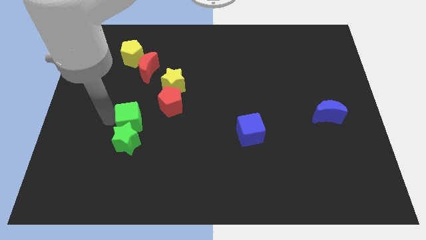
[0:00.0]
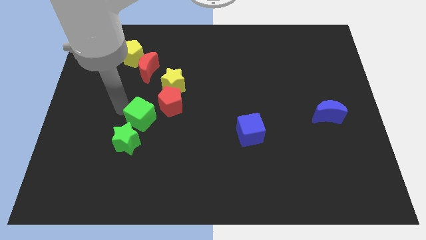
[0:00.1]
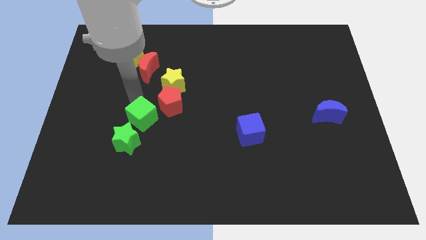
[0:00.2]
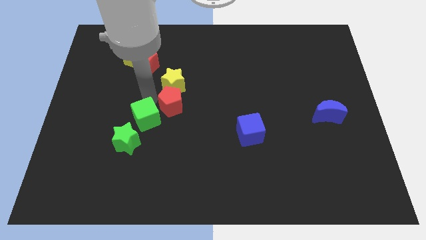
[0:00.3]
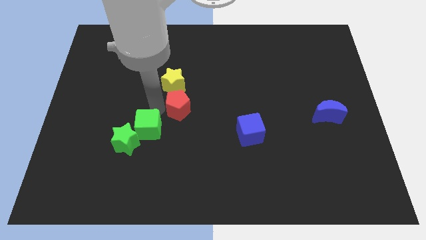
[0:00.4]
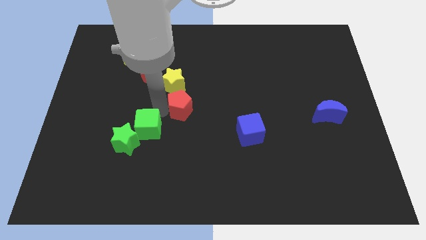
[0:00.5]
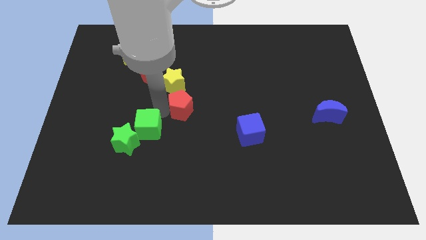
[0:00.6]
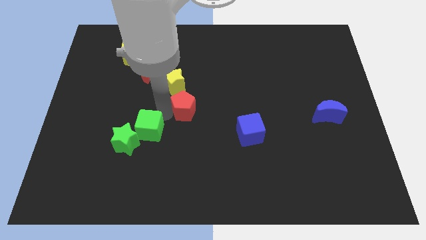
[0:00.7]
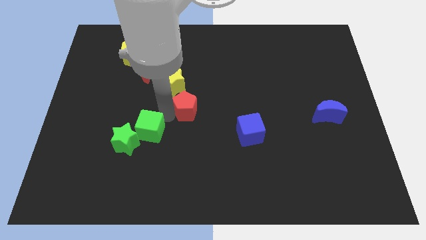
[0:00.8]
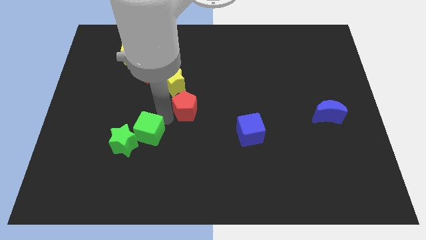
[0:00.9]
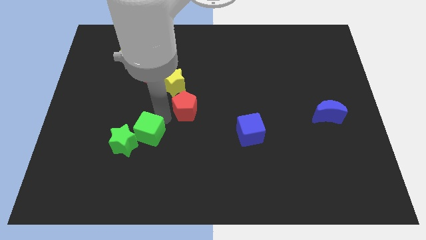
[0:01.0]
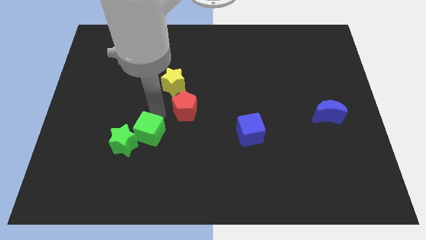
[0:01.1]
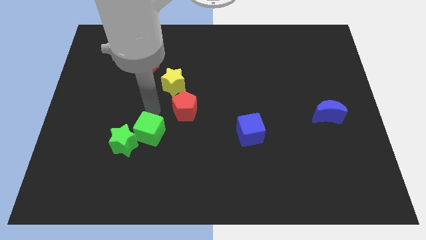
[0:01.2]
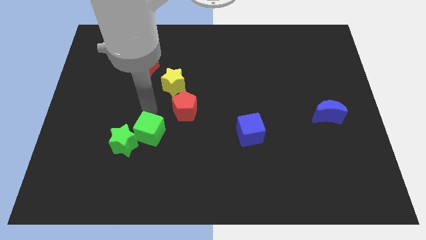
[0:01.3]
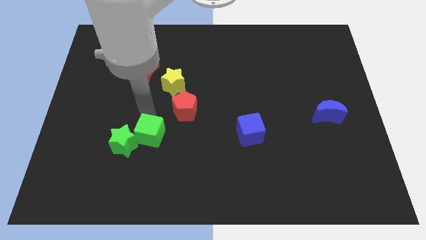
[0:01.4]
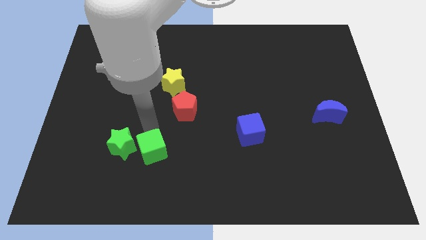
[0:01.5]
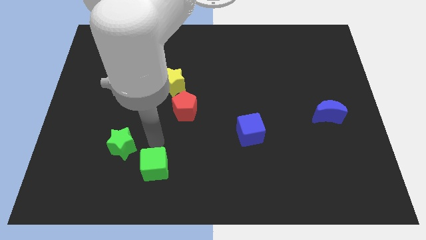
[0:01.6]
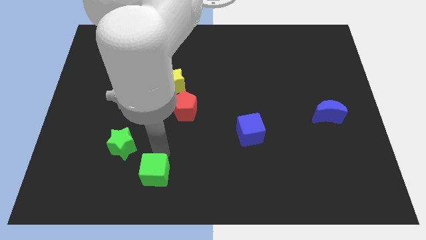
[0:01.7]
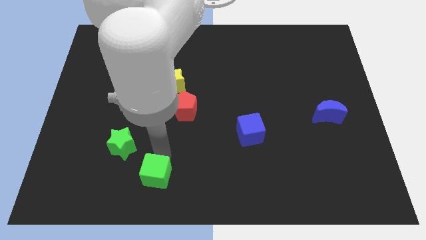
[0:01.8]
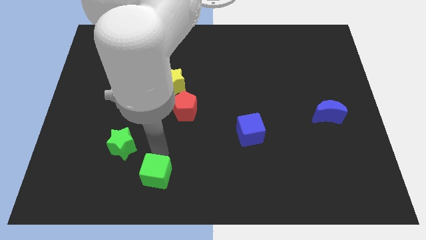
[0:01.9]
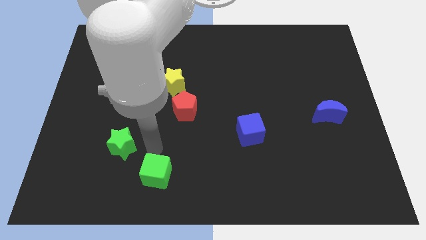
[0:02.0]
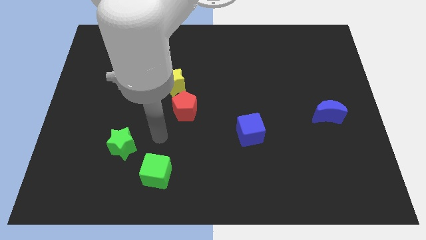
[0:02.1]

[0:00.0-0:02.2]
place the green cube diagonally bottom right to the green star

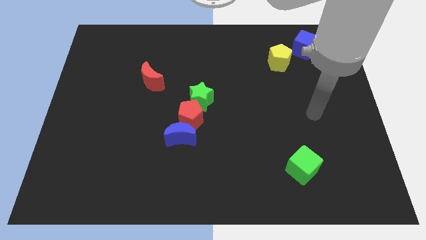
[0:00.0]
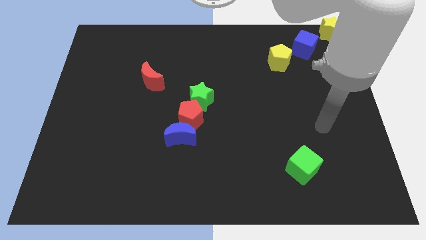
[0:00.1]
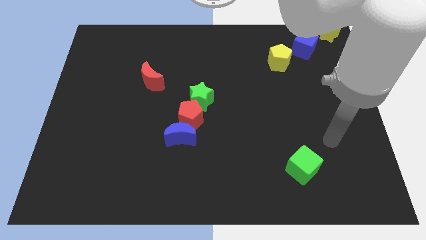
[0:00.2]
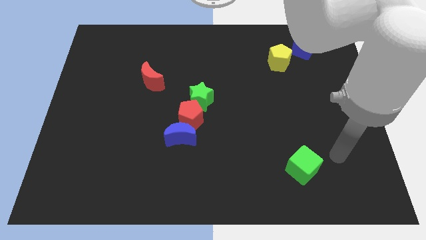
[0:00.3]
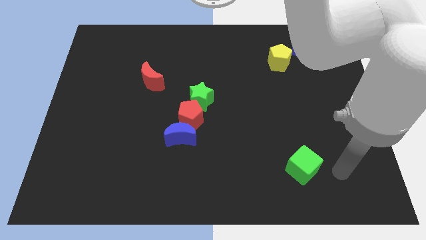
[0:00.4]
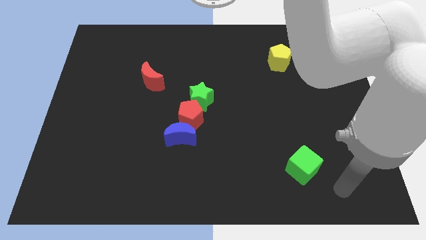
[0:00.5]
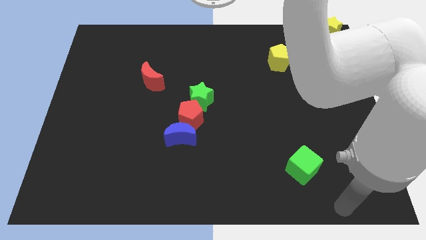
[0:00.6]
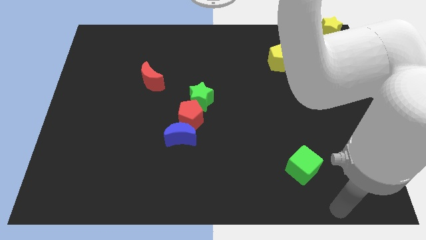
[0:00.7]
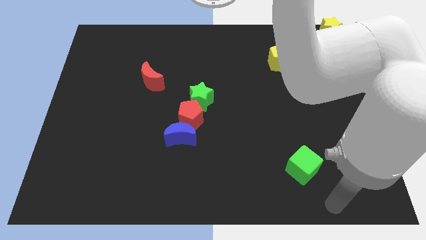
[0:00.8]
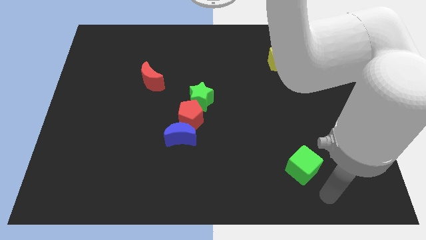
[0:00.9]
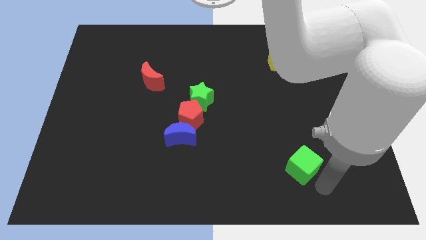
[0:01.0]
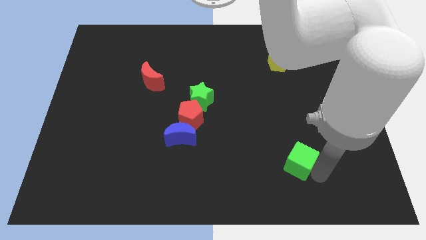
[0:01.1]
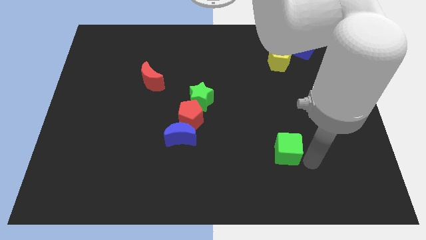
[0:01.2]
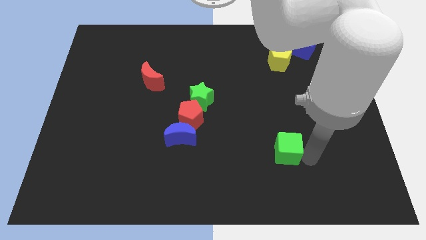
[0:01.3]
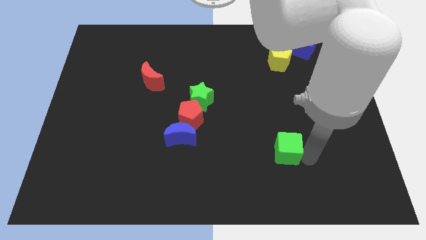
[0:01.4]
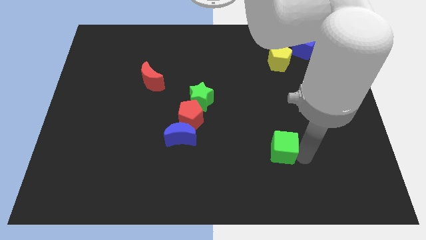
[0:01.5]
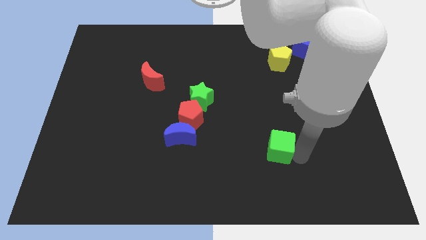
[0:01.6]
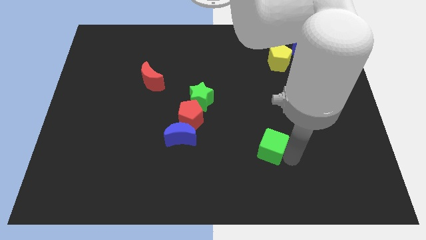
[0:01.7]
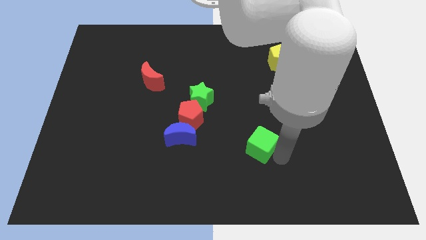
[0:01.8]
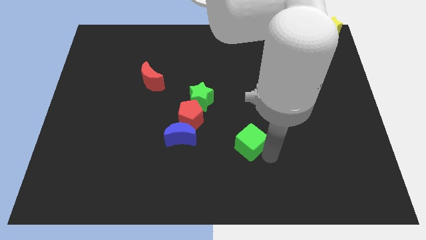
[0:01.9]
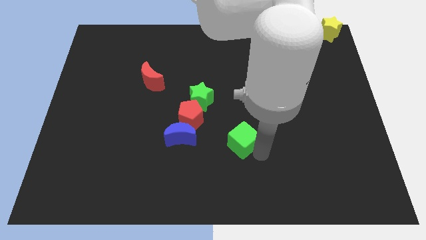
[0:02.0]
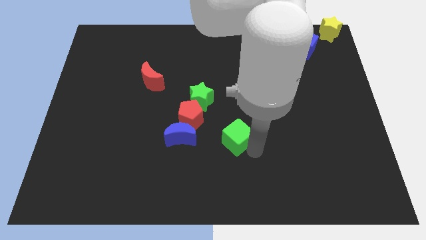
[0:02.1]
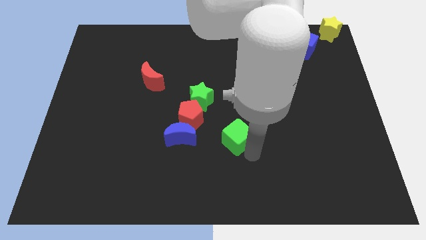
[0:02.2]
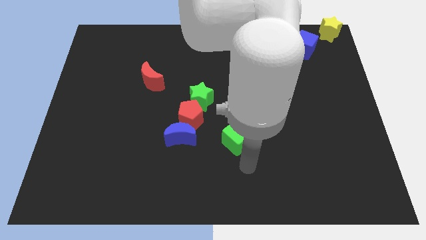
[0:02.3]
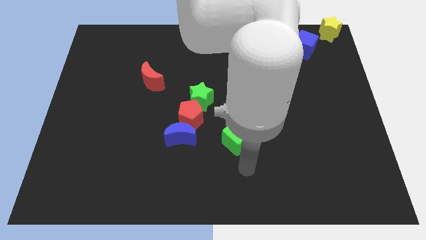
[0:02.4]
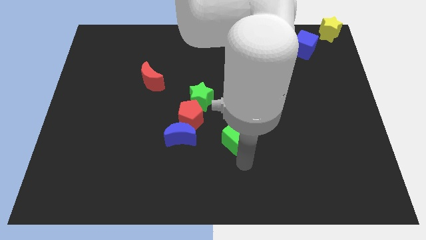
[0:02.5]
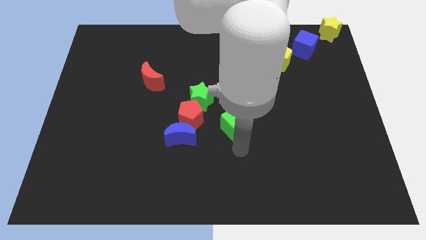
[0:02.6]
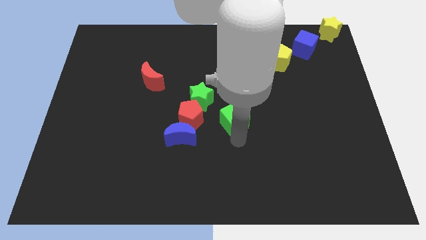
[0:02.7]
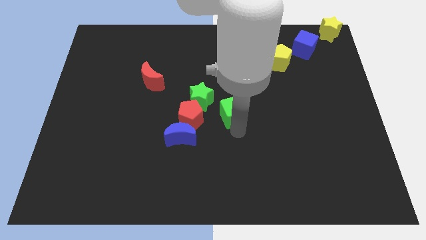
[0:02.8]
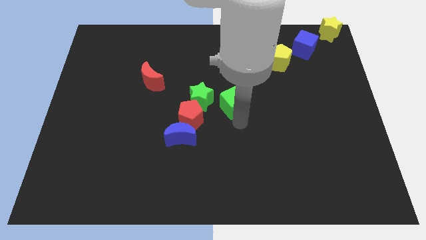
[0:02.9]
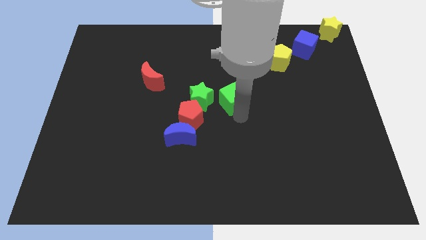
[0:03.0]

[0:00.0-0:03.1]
push green cube beside green star

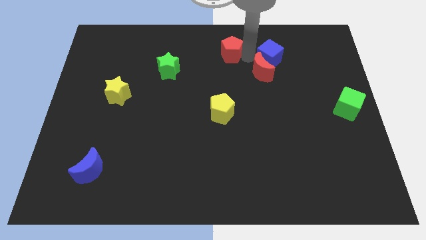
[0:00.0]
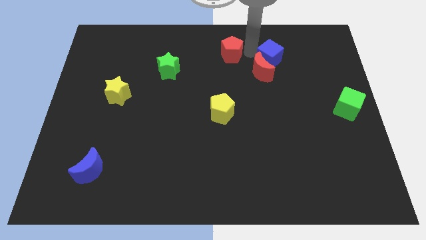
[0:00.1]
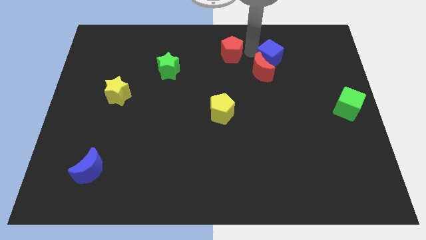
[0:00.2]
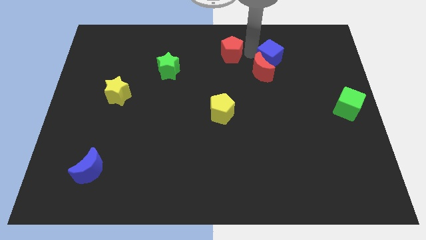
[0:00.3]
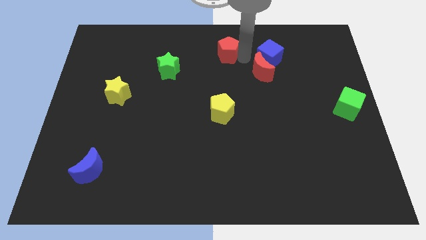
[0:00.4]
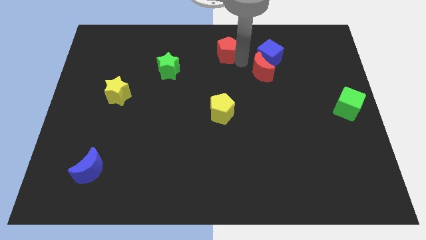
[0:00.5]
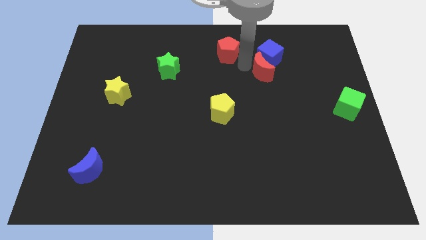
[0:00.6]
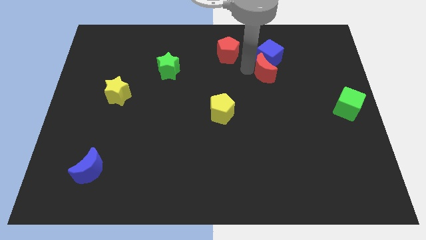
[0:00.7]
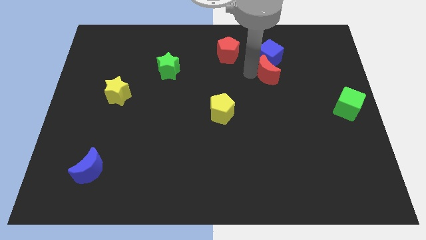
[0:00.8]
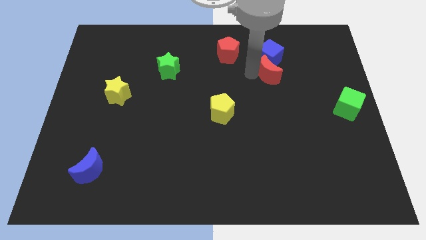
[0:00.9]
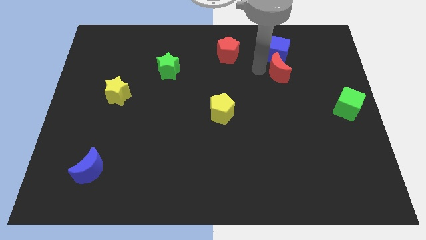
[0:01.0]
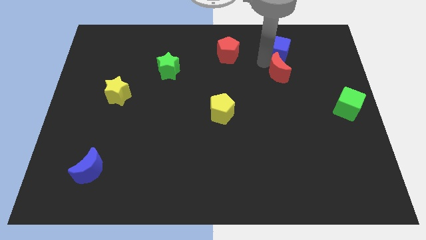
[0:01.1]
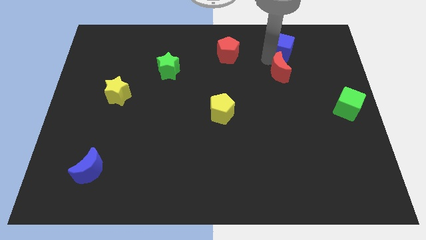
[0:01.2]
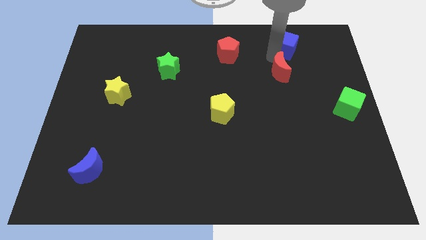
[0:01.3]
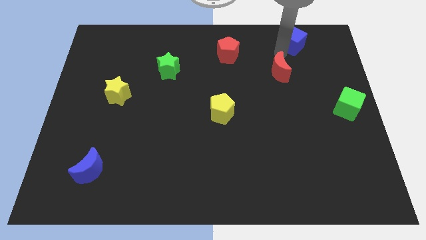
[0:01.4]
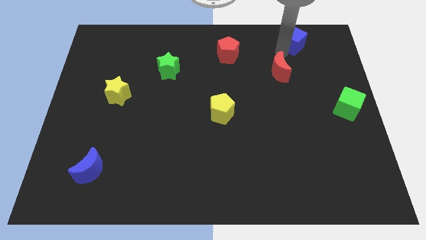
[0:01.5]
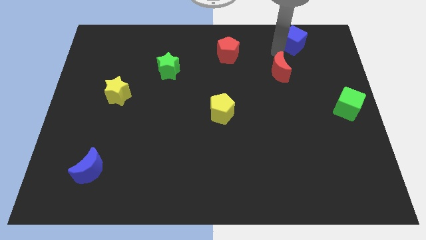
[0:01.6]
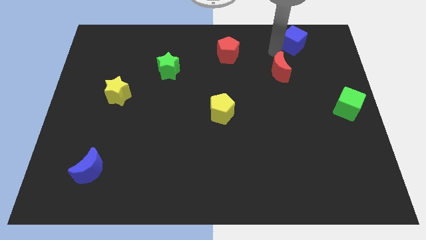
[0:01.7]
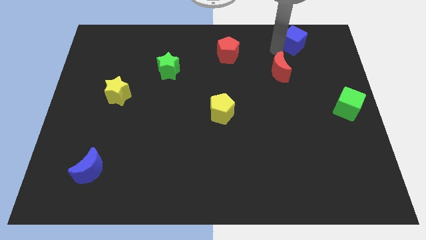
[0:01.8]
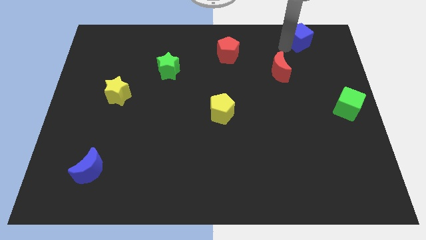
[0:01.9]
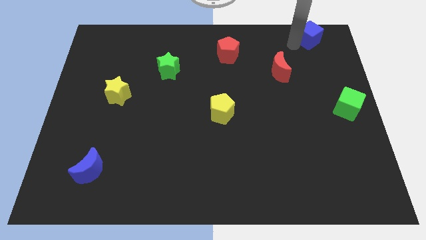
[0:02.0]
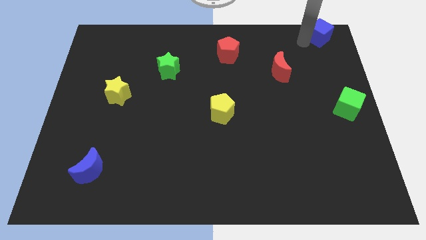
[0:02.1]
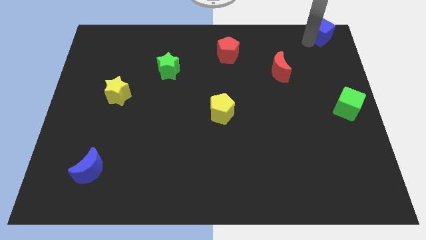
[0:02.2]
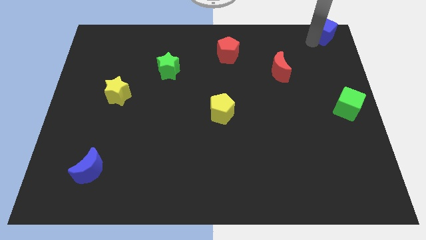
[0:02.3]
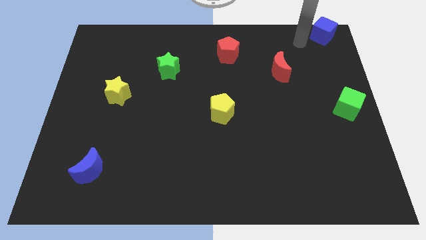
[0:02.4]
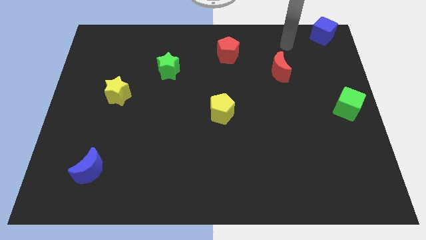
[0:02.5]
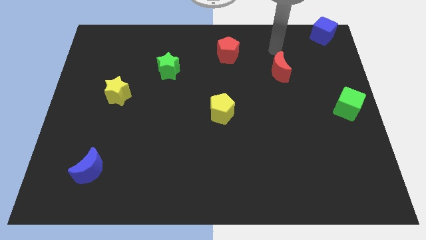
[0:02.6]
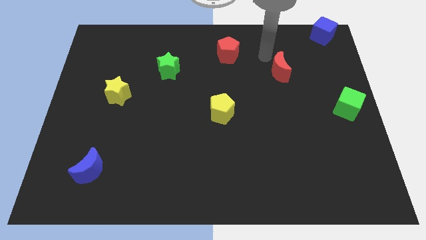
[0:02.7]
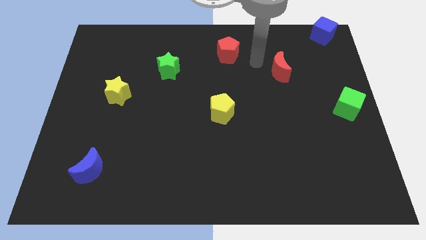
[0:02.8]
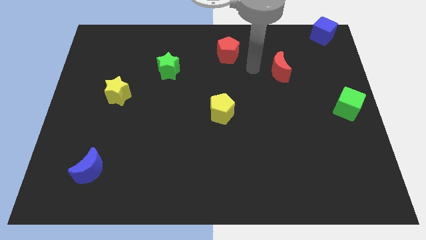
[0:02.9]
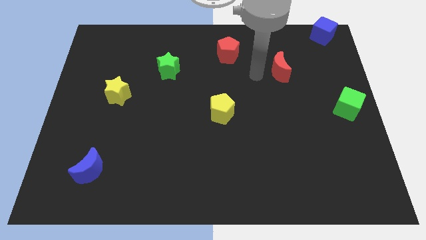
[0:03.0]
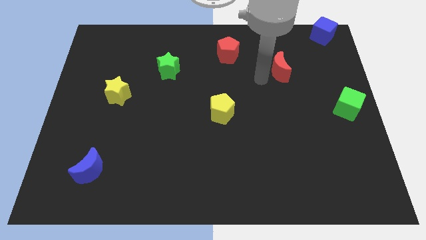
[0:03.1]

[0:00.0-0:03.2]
place the blue cube at the top right corner of the board

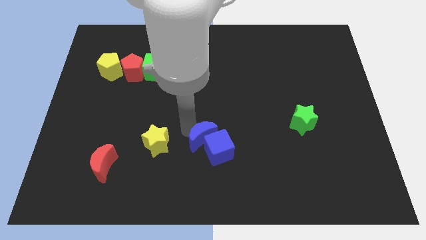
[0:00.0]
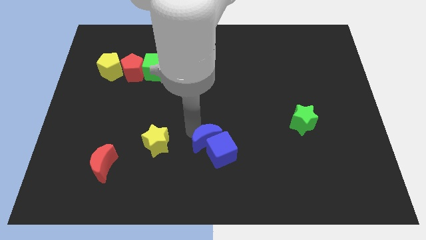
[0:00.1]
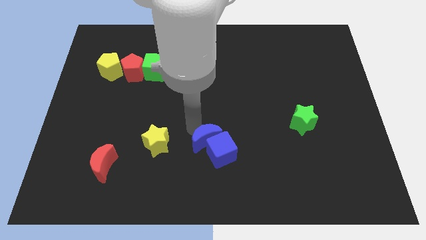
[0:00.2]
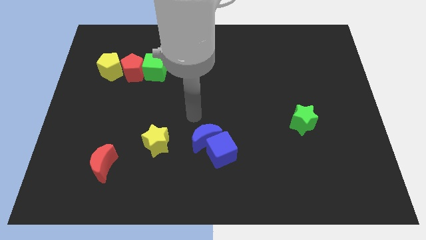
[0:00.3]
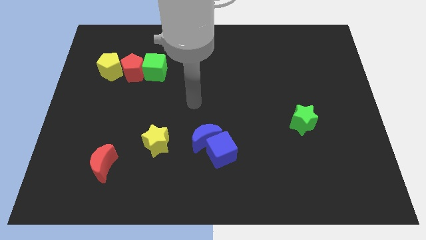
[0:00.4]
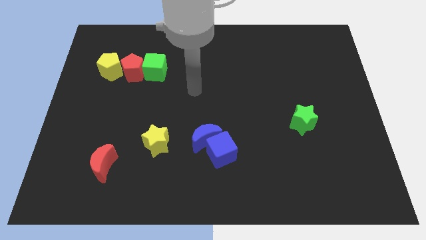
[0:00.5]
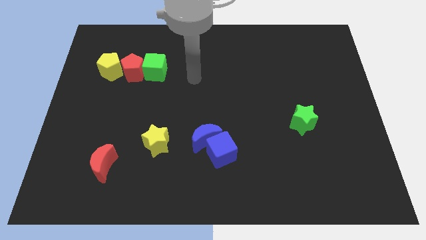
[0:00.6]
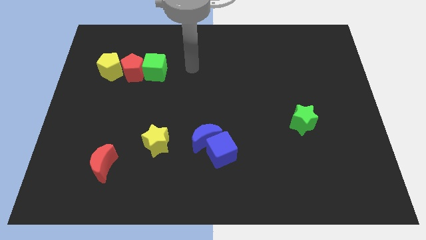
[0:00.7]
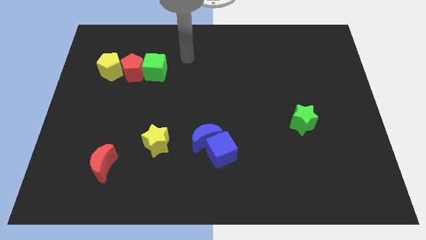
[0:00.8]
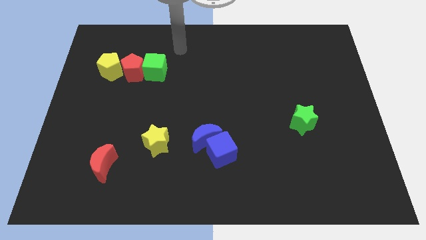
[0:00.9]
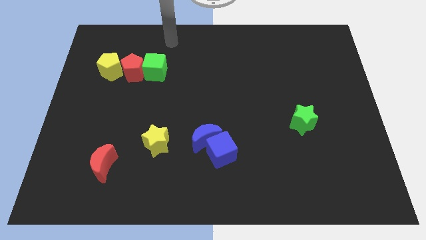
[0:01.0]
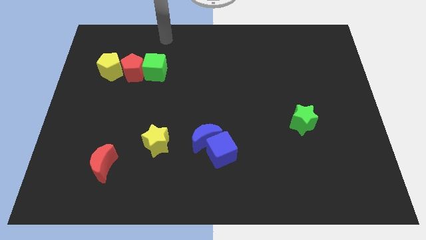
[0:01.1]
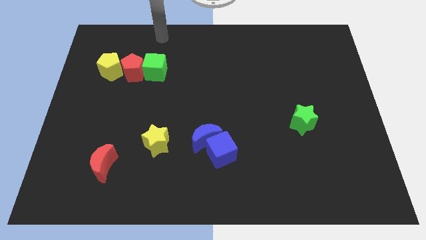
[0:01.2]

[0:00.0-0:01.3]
place your arm on the top of the green cube
